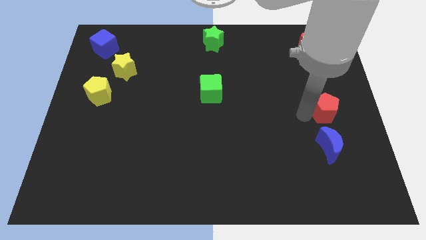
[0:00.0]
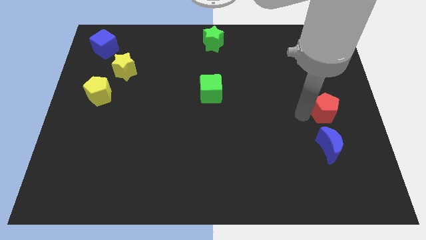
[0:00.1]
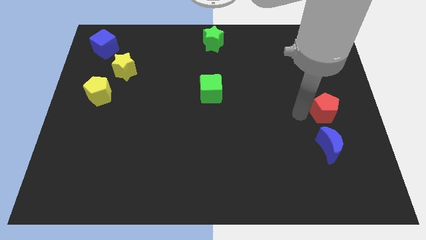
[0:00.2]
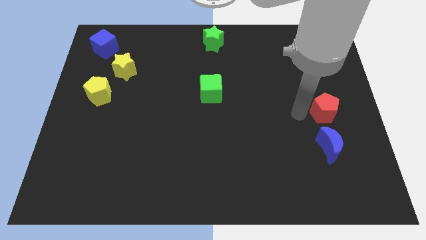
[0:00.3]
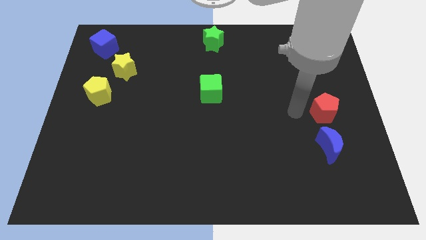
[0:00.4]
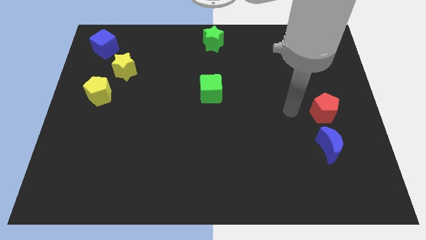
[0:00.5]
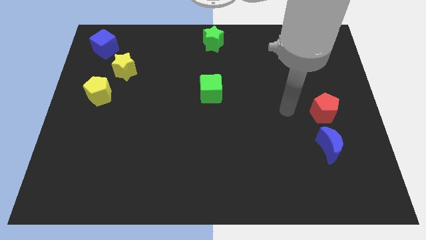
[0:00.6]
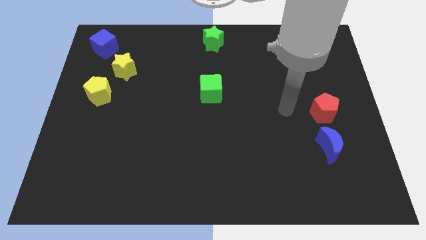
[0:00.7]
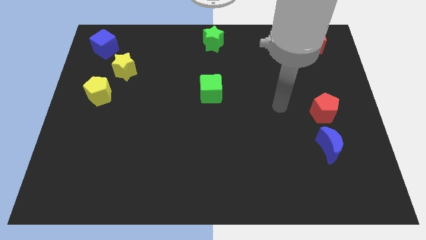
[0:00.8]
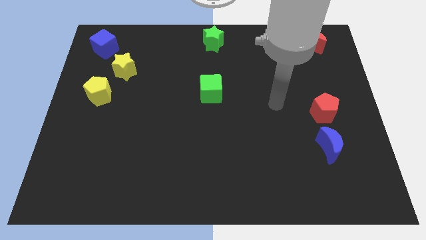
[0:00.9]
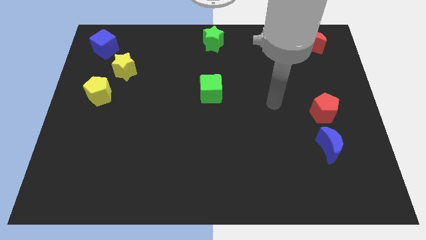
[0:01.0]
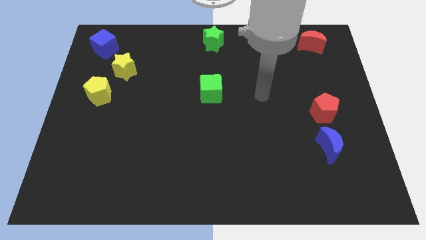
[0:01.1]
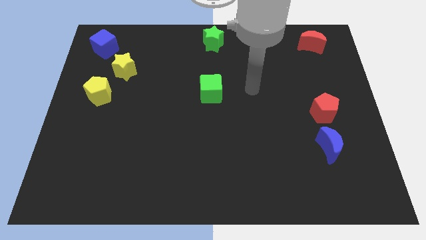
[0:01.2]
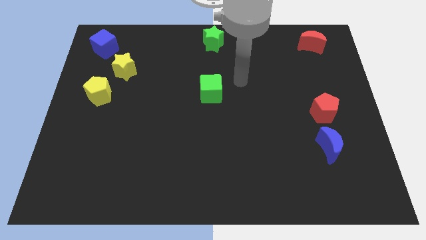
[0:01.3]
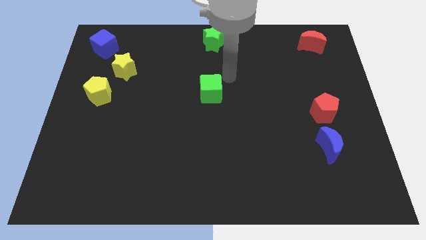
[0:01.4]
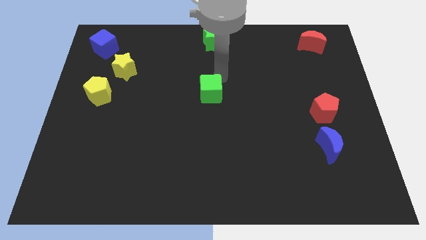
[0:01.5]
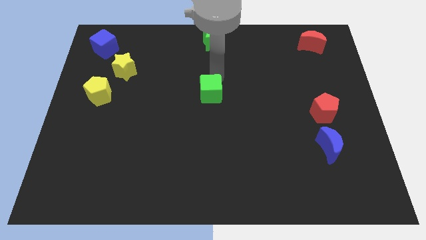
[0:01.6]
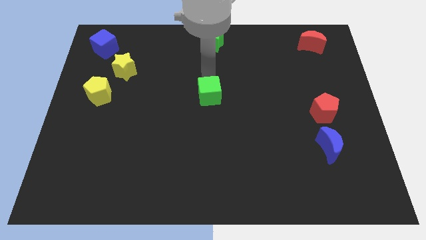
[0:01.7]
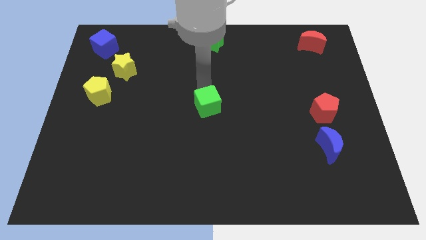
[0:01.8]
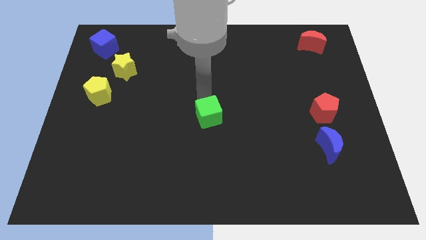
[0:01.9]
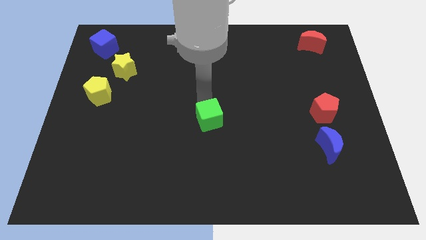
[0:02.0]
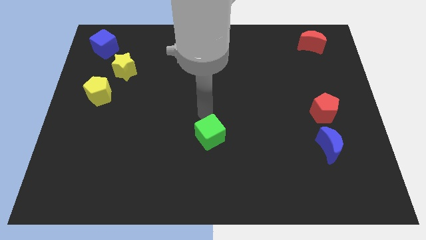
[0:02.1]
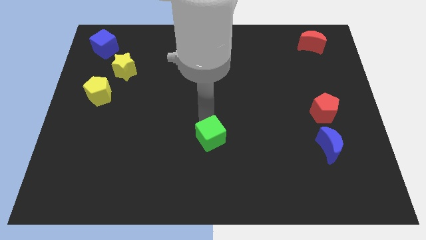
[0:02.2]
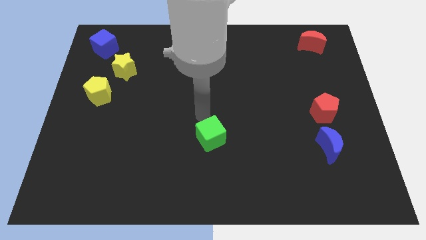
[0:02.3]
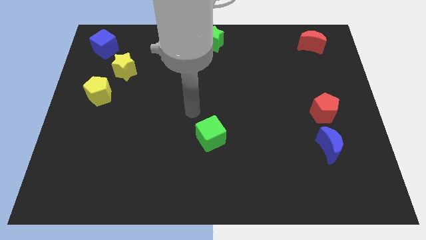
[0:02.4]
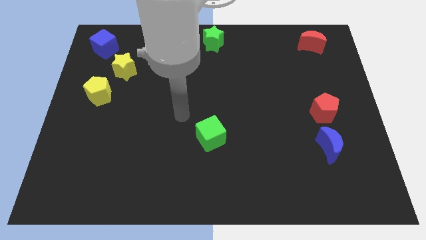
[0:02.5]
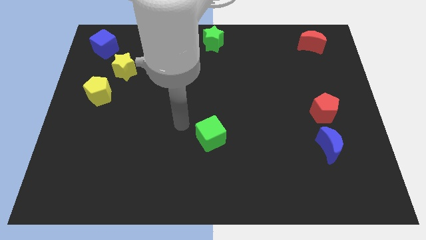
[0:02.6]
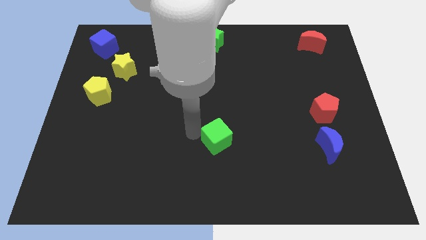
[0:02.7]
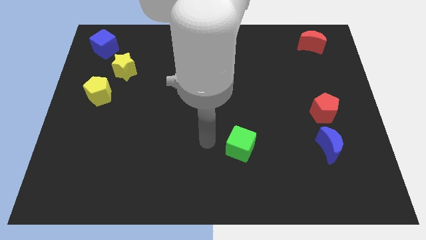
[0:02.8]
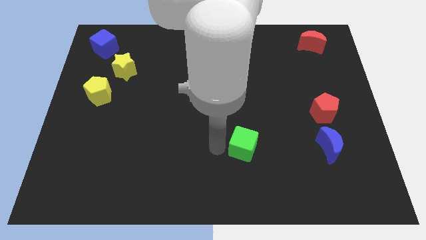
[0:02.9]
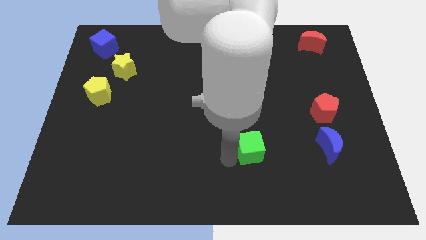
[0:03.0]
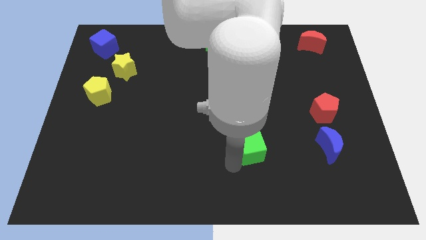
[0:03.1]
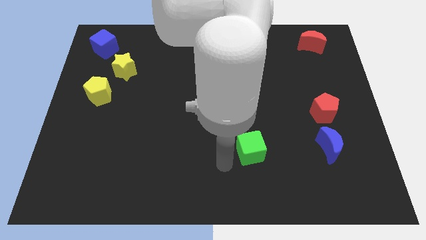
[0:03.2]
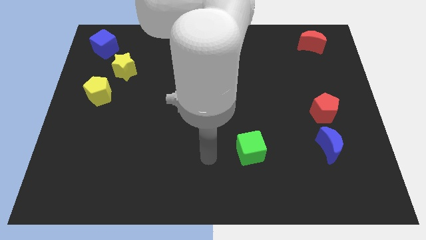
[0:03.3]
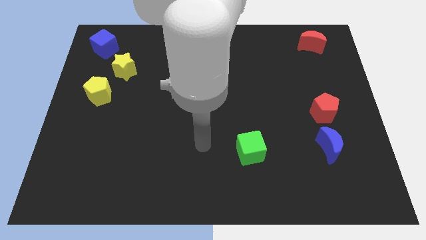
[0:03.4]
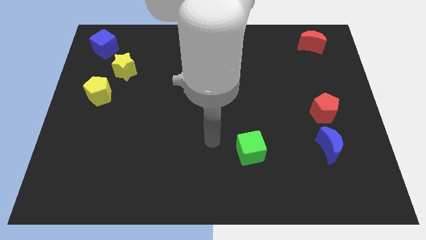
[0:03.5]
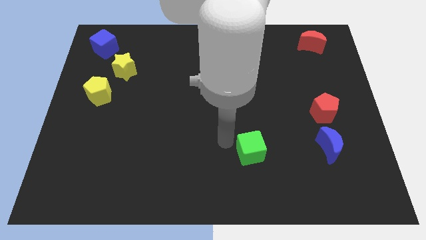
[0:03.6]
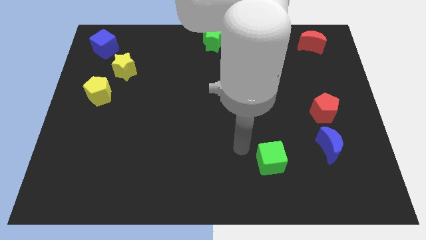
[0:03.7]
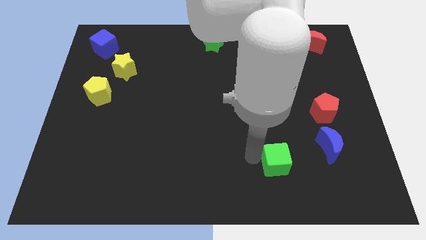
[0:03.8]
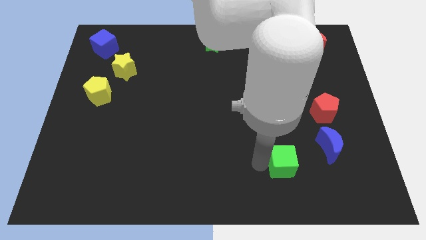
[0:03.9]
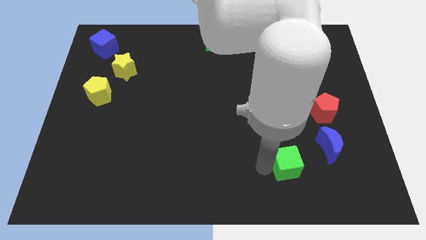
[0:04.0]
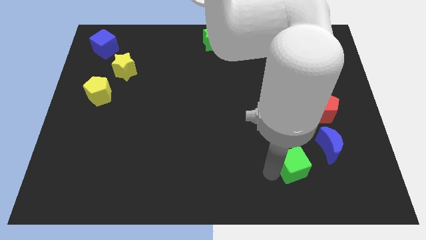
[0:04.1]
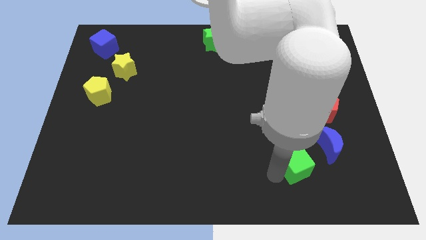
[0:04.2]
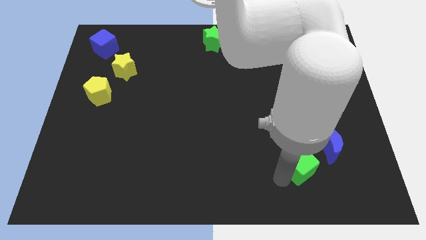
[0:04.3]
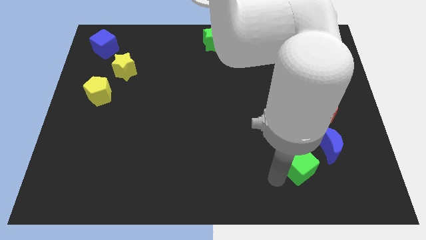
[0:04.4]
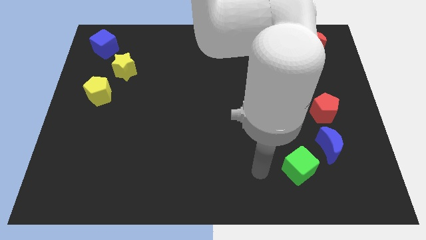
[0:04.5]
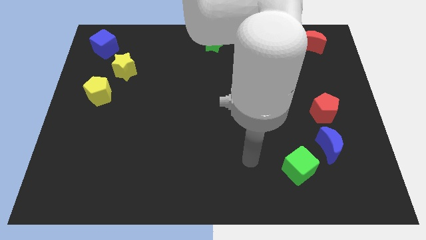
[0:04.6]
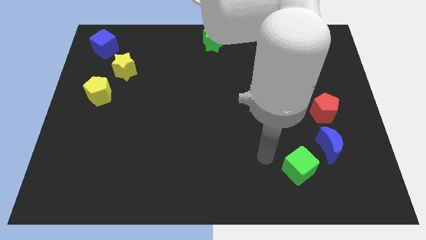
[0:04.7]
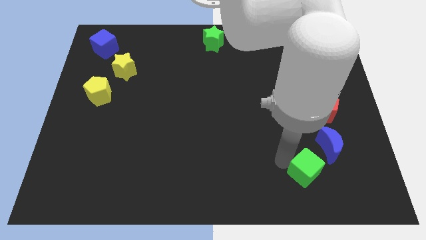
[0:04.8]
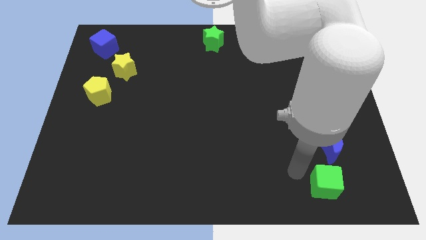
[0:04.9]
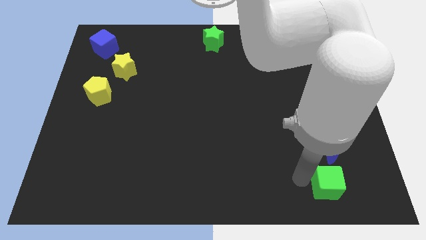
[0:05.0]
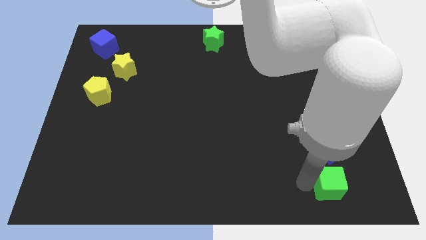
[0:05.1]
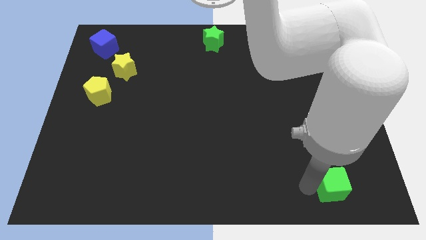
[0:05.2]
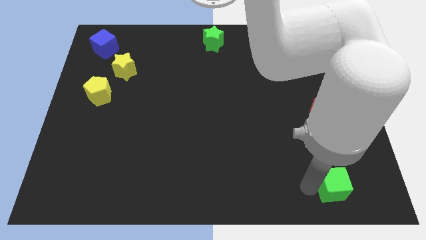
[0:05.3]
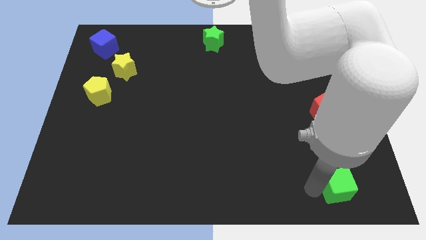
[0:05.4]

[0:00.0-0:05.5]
place green cube towards bottom right side of the table

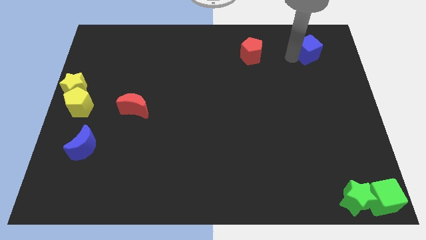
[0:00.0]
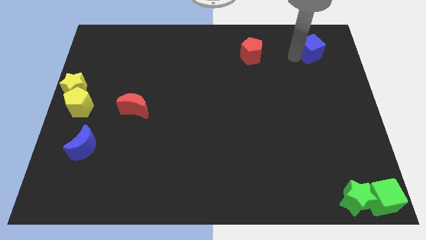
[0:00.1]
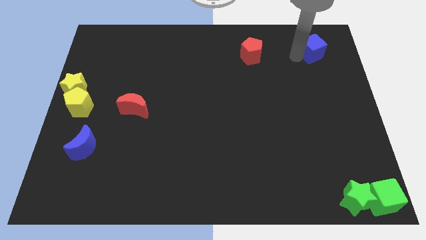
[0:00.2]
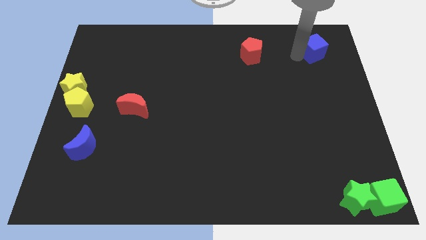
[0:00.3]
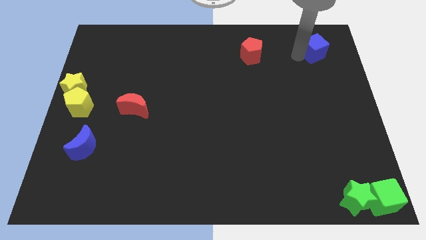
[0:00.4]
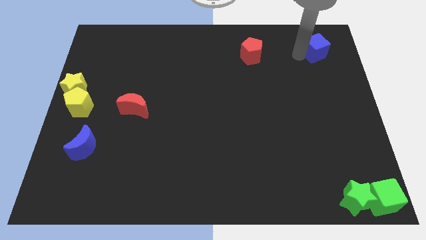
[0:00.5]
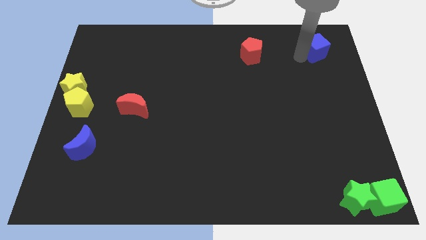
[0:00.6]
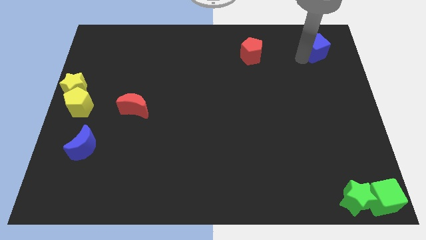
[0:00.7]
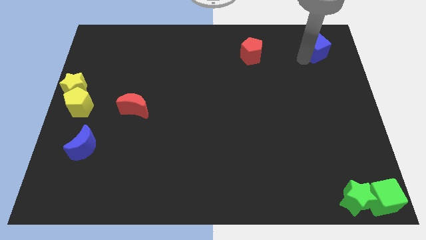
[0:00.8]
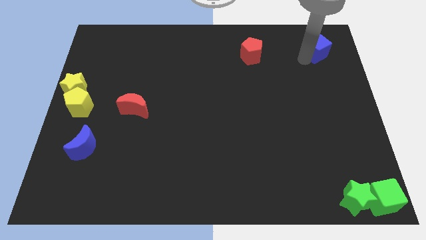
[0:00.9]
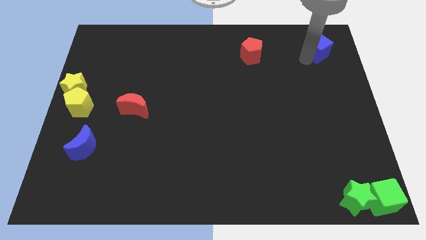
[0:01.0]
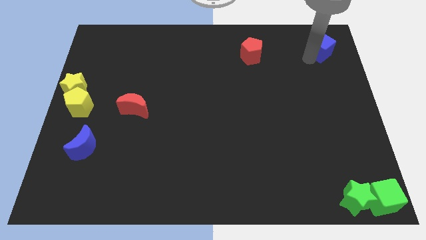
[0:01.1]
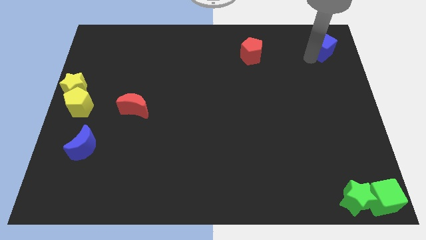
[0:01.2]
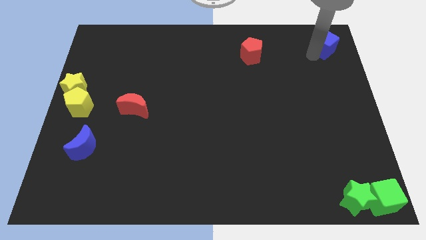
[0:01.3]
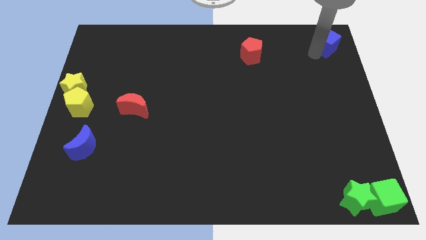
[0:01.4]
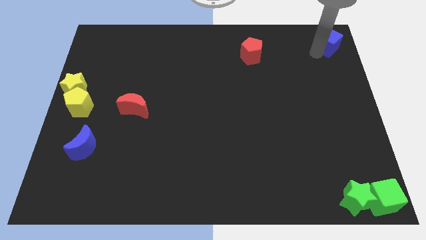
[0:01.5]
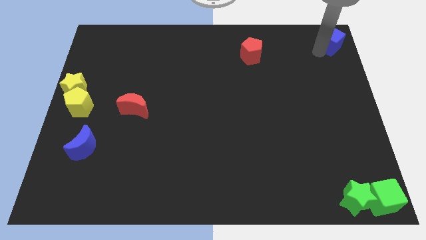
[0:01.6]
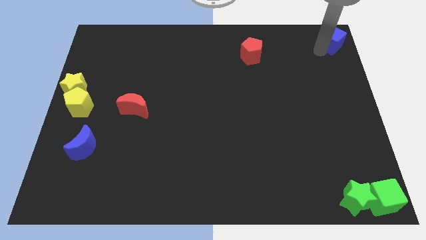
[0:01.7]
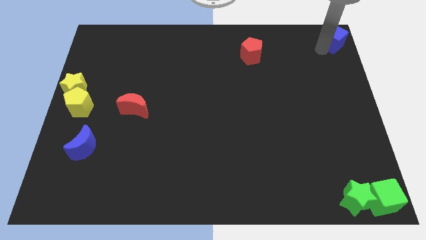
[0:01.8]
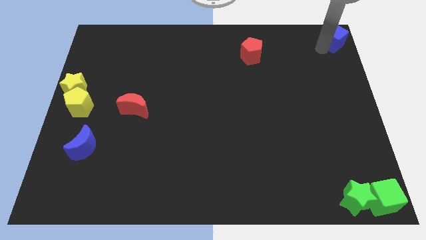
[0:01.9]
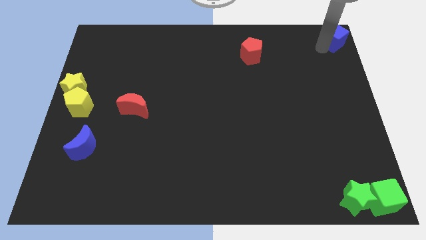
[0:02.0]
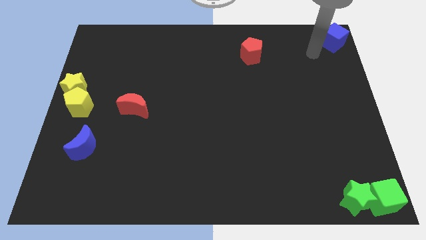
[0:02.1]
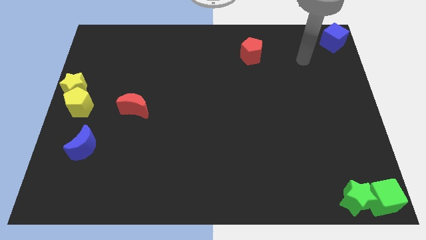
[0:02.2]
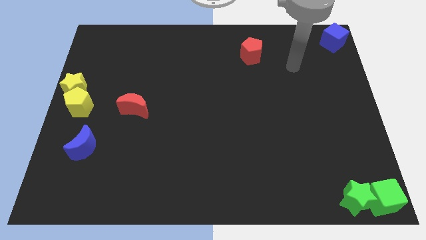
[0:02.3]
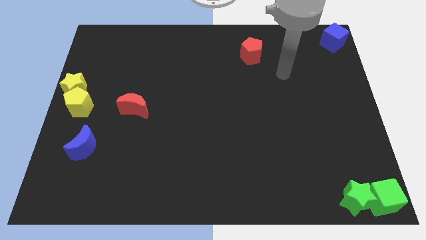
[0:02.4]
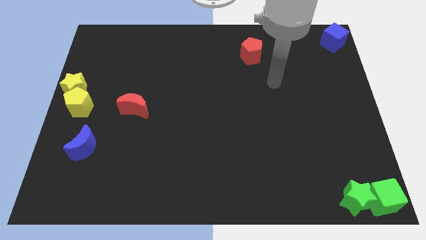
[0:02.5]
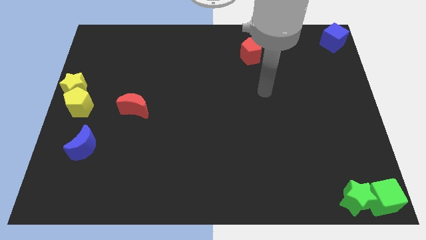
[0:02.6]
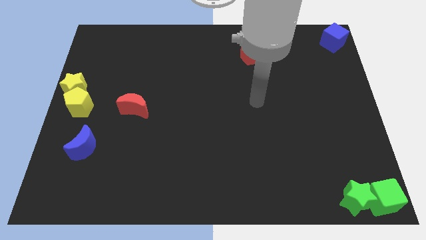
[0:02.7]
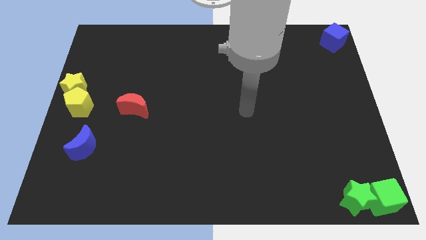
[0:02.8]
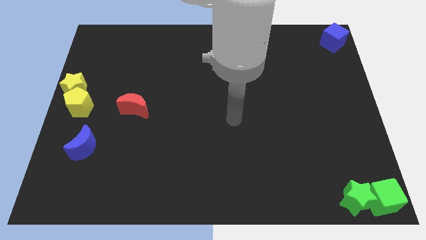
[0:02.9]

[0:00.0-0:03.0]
place the blue cube at the top right corner of the board

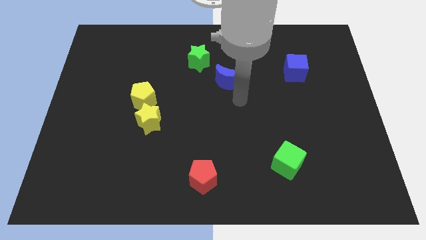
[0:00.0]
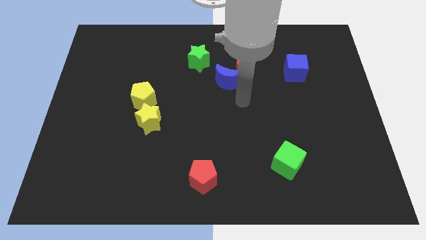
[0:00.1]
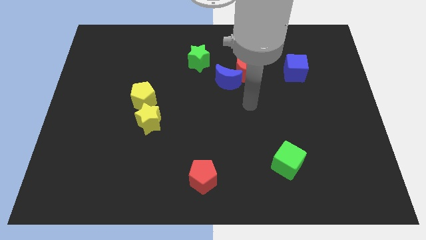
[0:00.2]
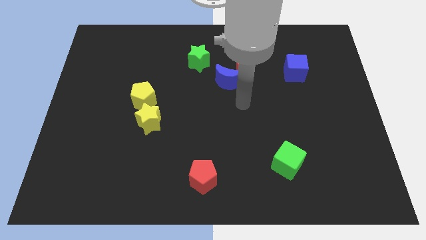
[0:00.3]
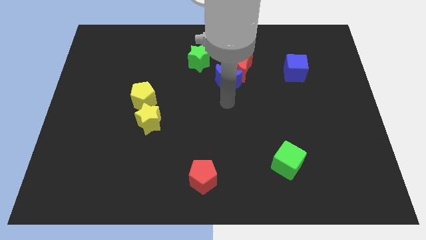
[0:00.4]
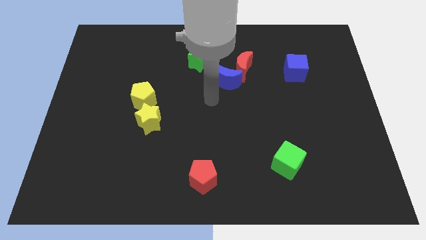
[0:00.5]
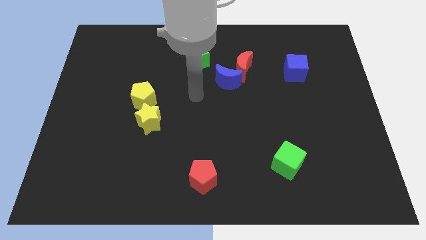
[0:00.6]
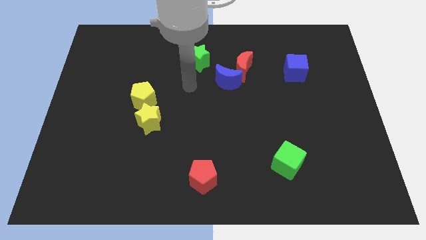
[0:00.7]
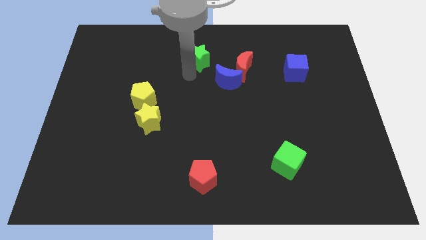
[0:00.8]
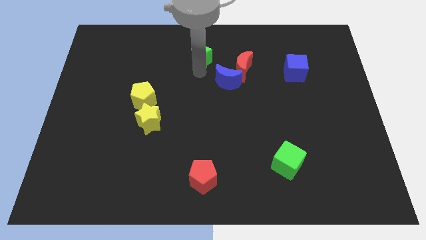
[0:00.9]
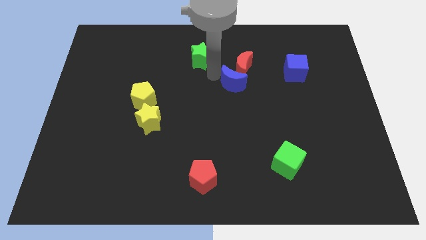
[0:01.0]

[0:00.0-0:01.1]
place the arm in between green star and blue crescent
